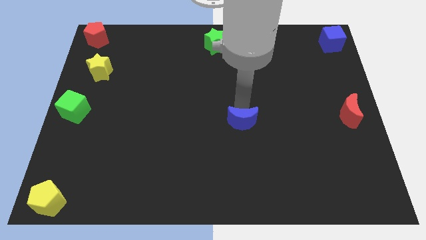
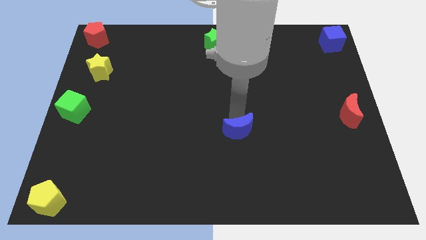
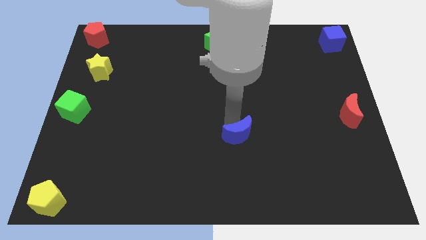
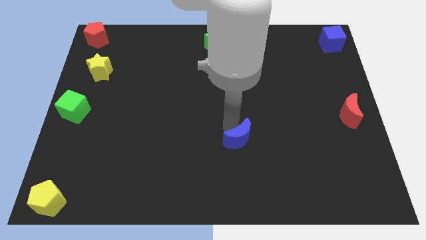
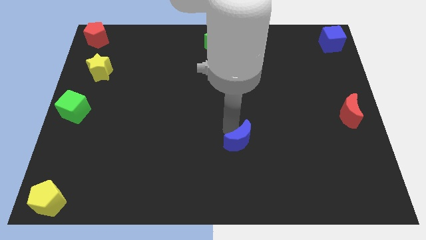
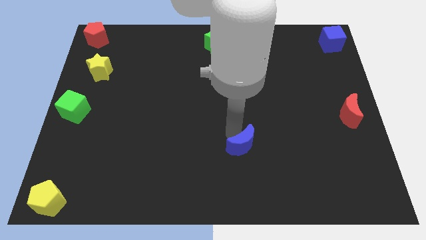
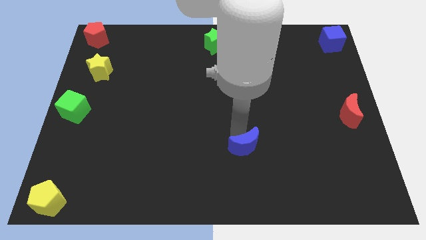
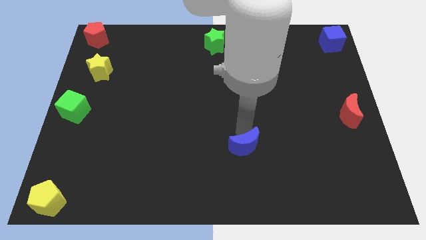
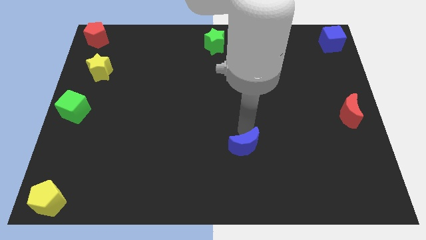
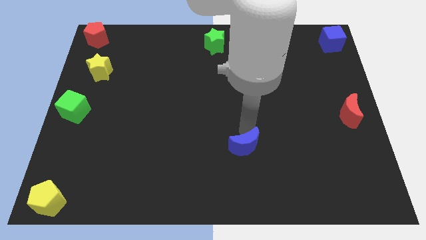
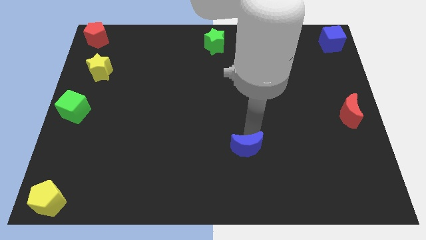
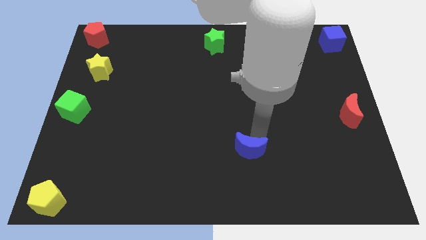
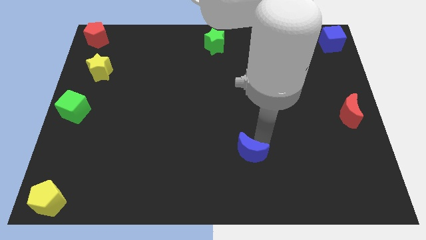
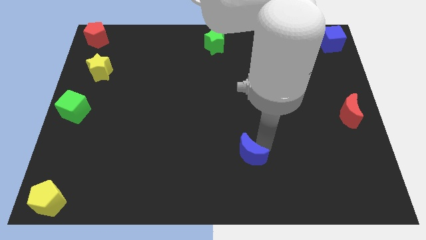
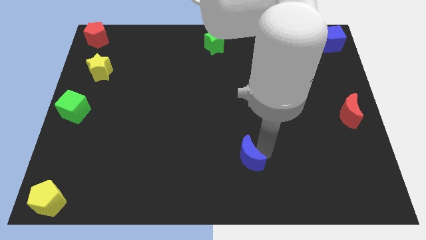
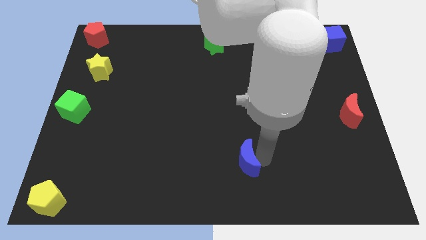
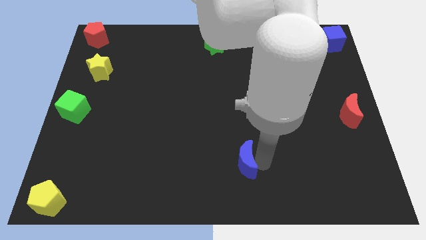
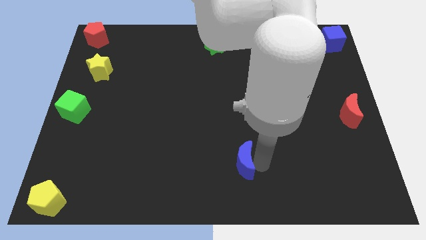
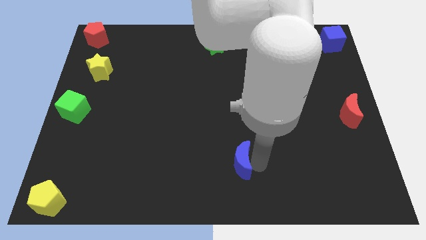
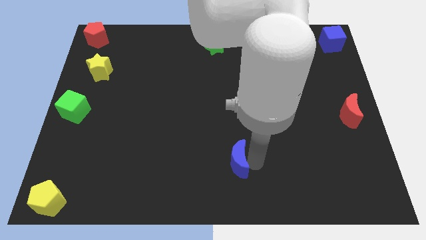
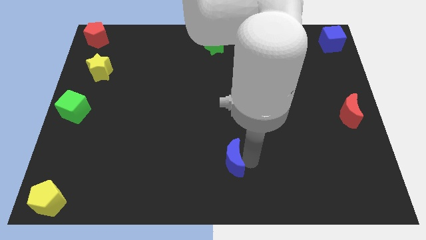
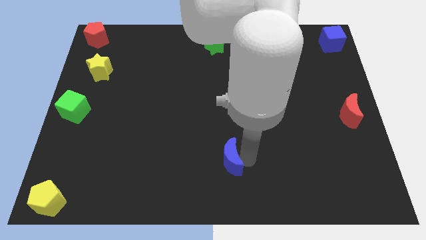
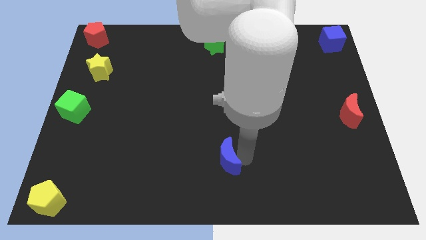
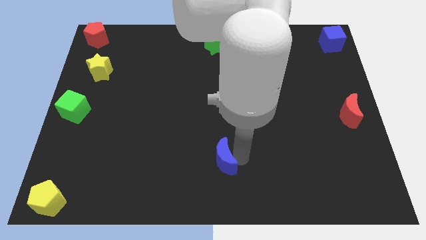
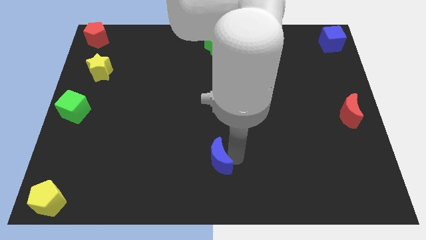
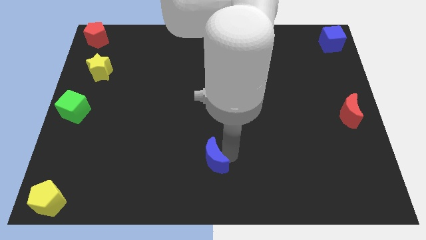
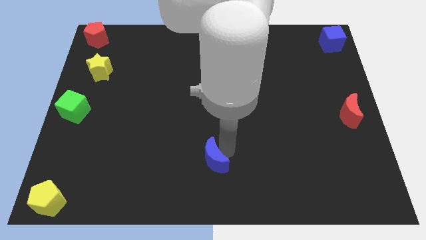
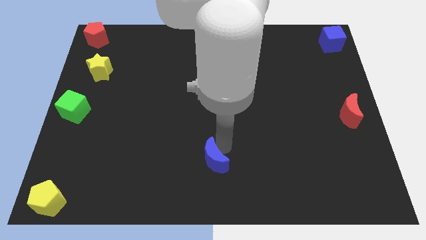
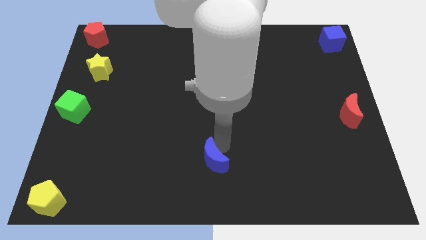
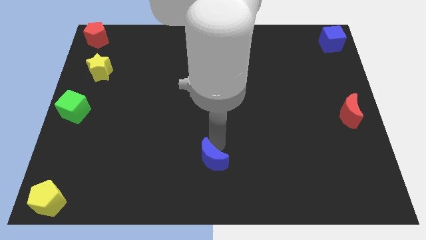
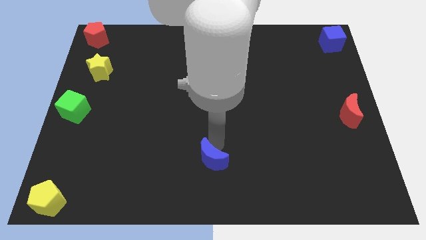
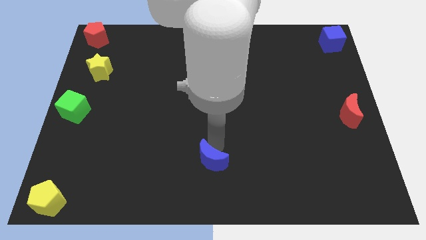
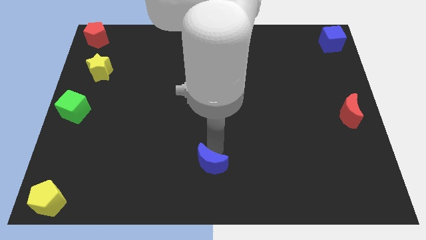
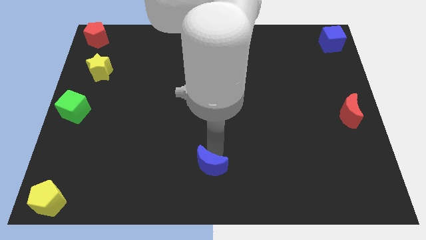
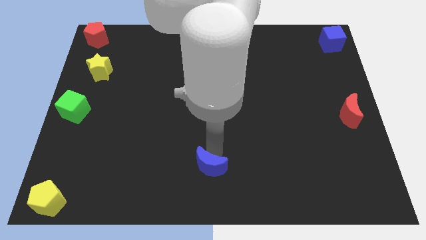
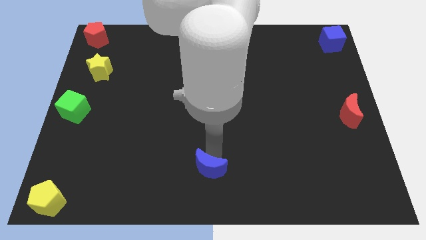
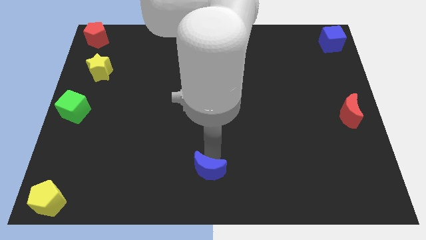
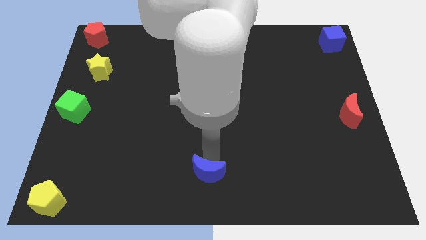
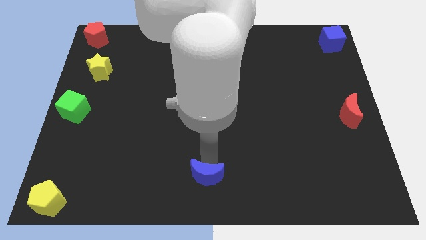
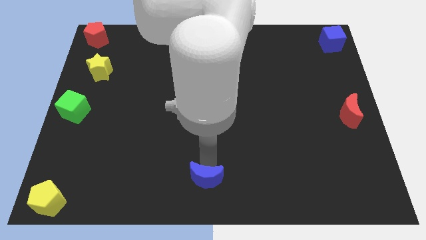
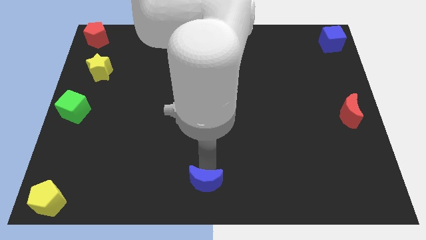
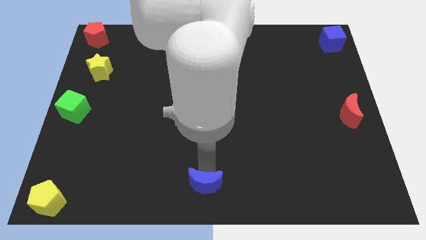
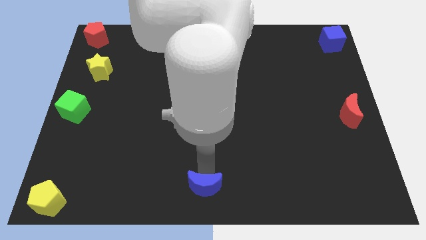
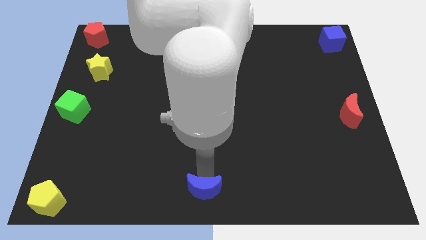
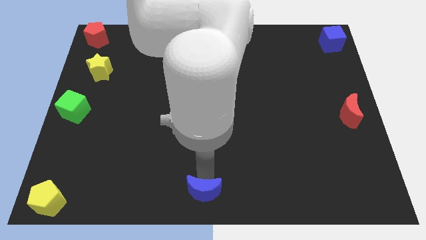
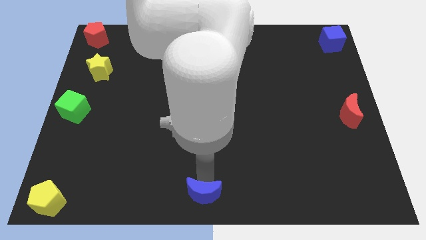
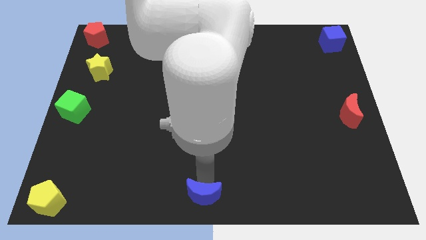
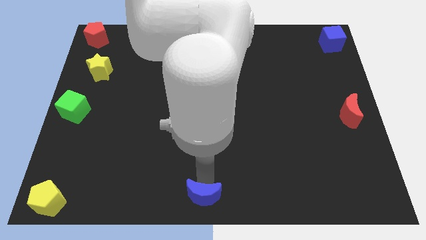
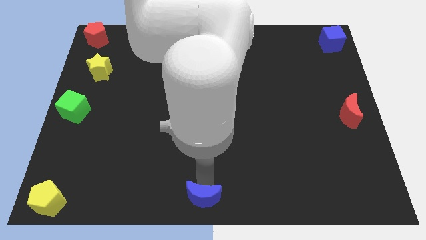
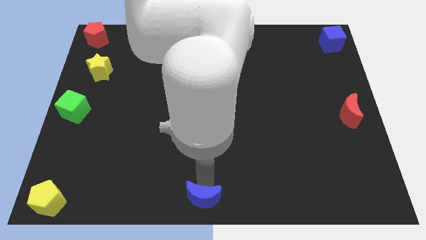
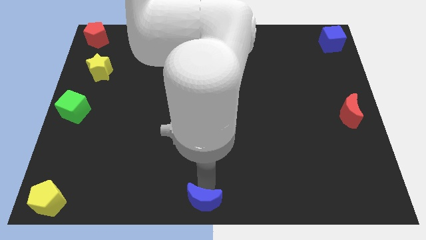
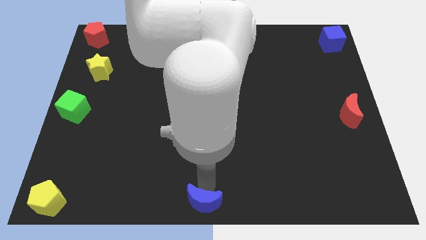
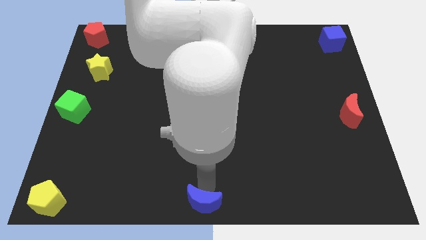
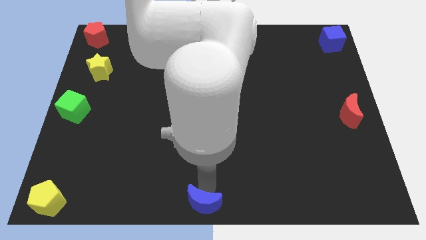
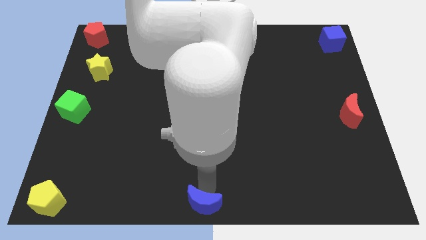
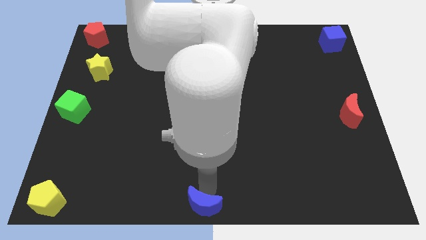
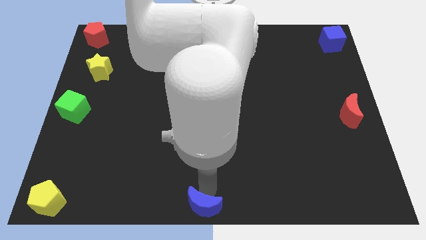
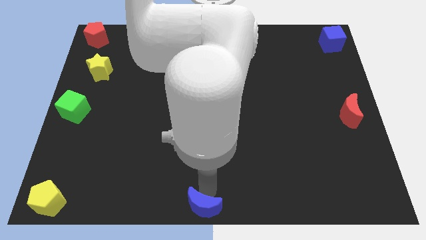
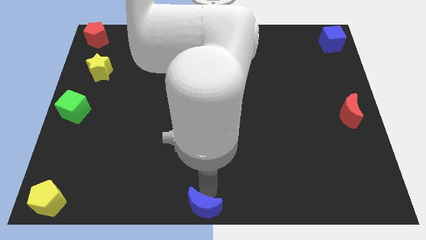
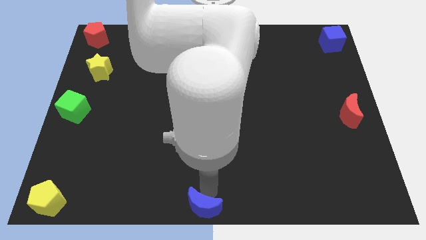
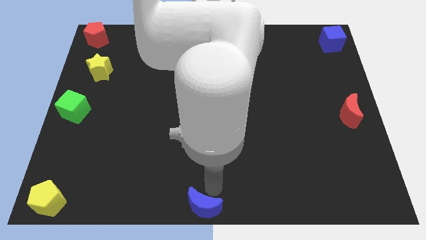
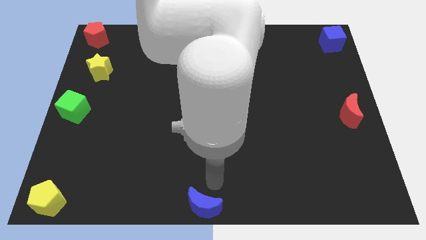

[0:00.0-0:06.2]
push the blue crescent to the bottom center of the board

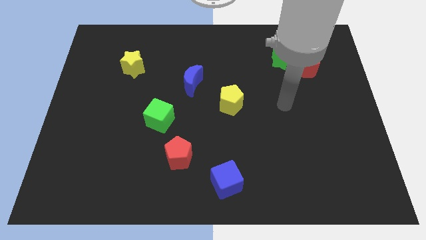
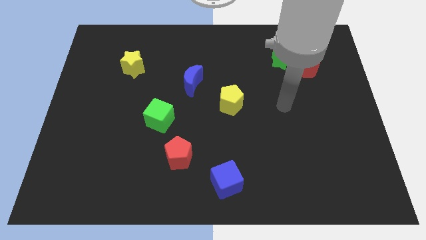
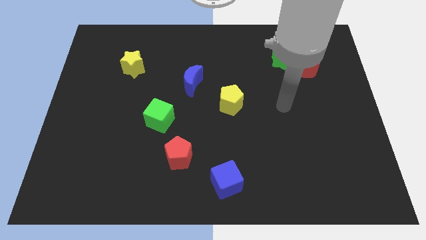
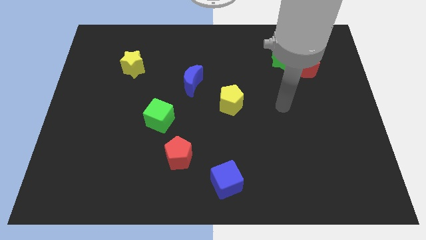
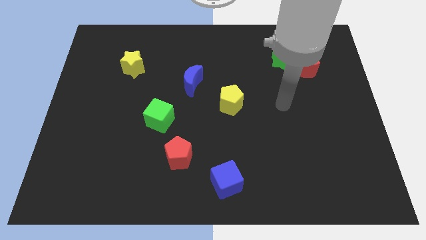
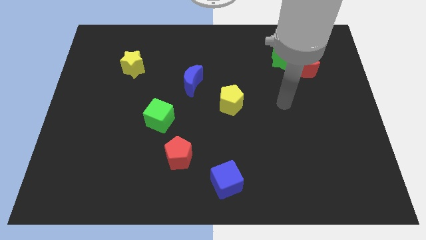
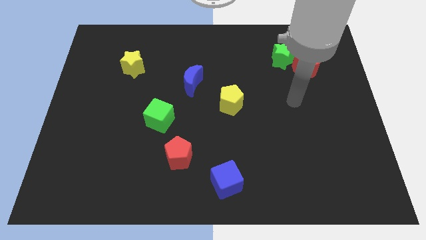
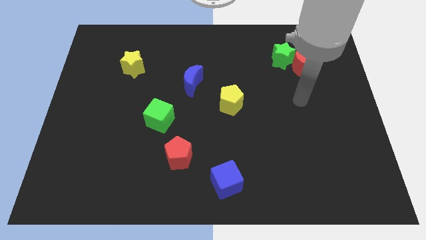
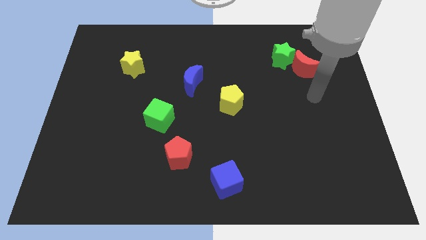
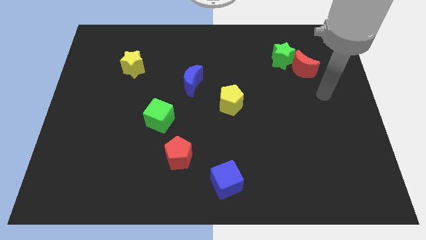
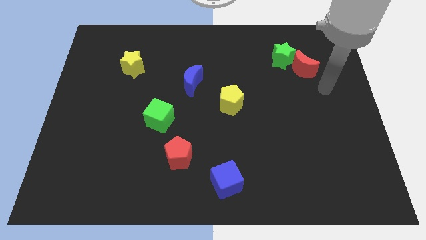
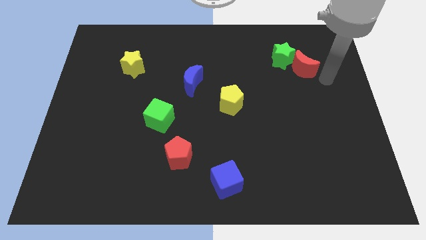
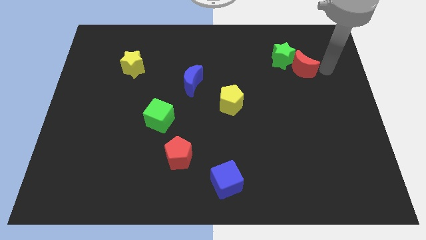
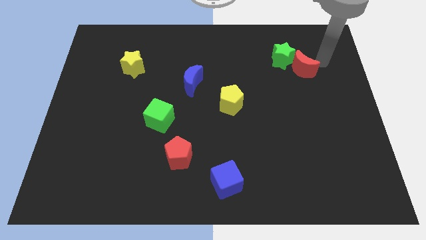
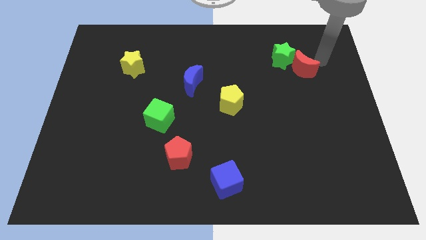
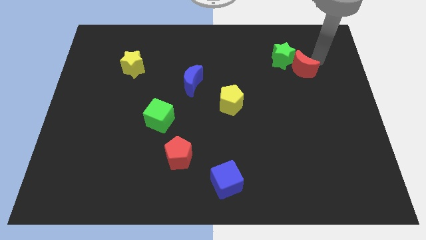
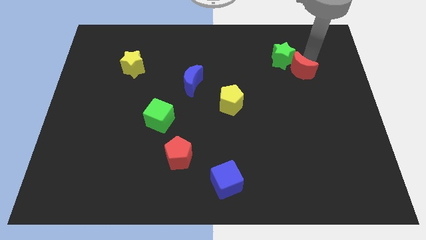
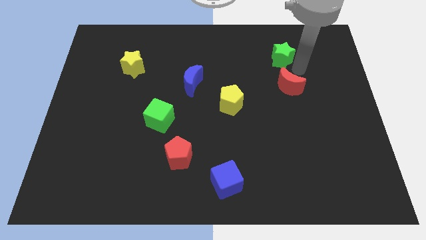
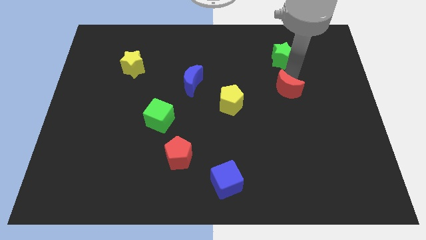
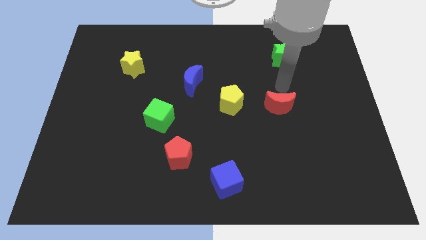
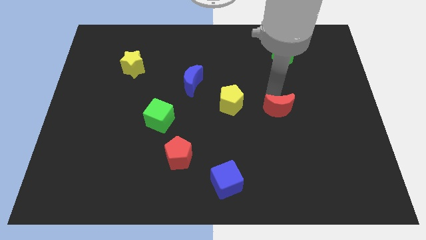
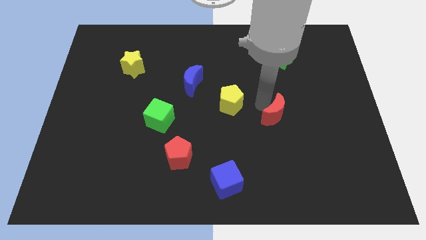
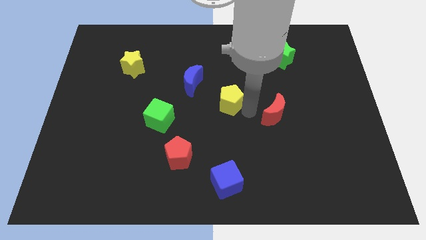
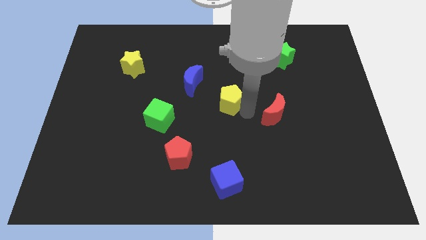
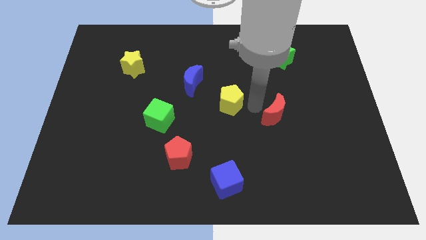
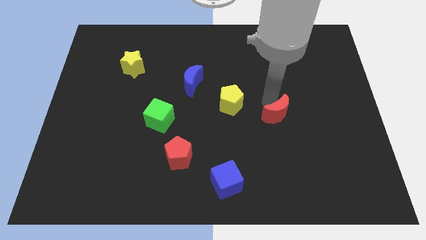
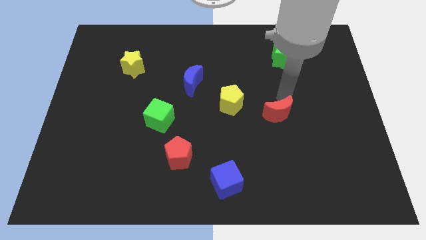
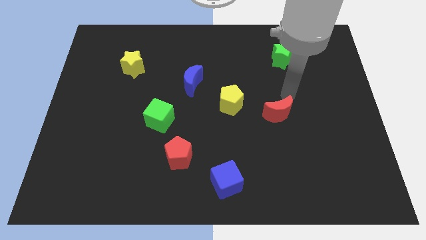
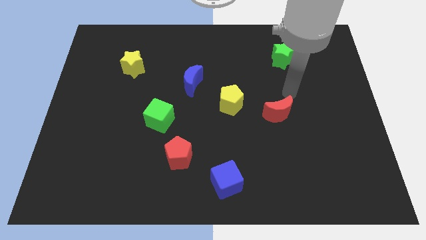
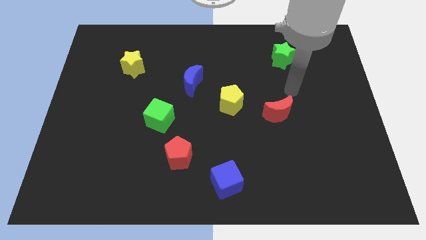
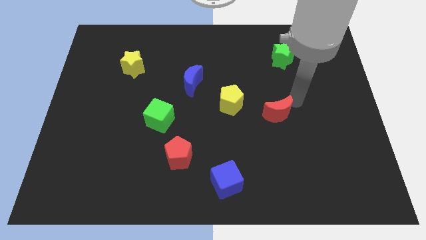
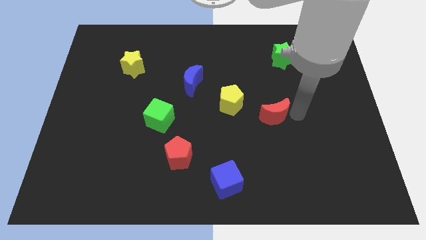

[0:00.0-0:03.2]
separate the red moon from the green star
